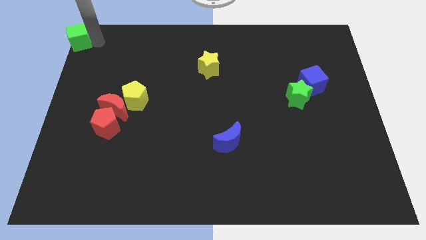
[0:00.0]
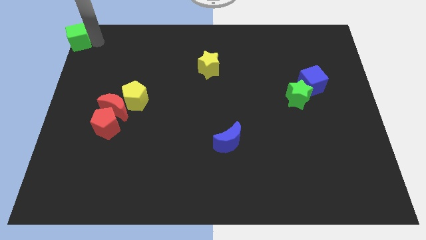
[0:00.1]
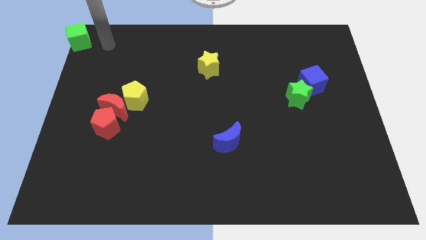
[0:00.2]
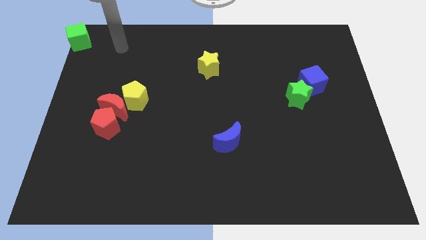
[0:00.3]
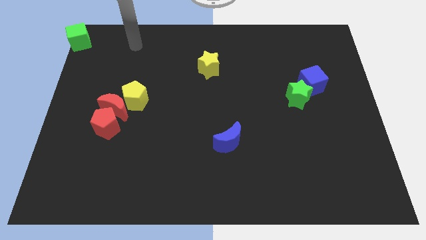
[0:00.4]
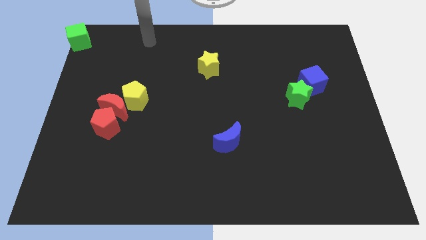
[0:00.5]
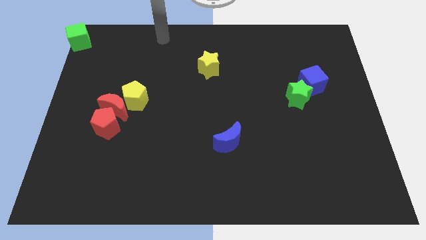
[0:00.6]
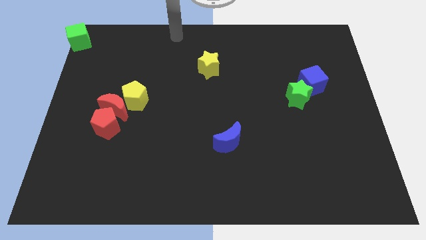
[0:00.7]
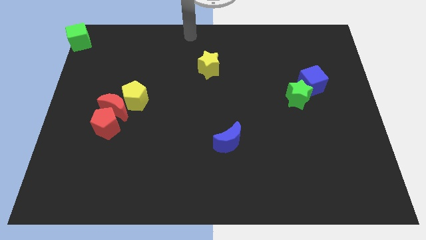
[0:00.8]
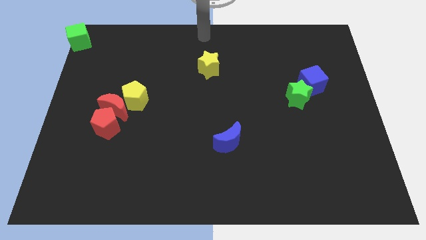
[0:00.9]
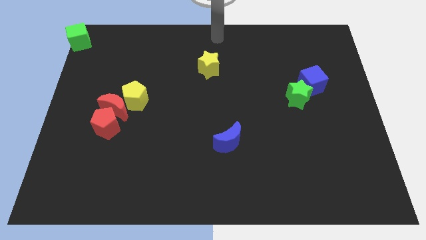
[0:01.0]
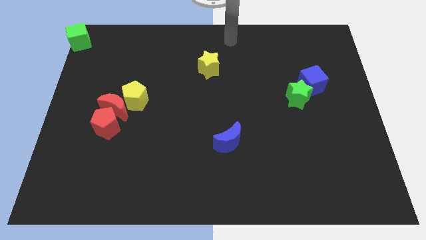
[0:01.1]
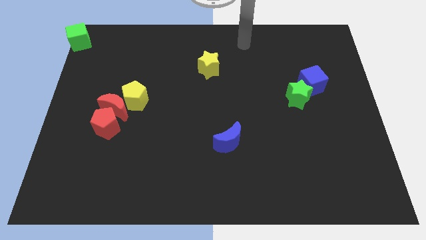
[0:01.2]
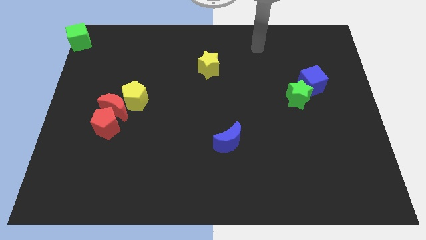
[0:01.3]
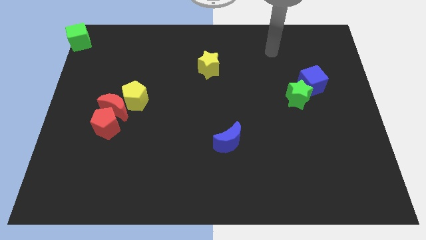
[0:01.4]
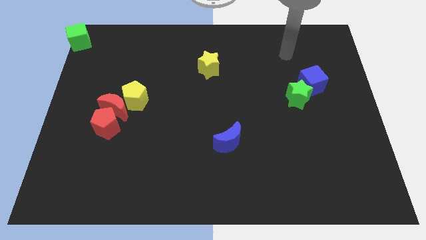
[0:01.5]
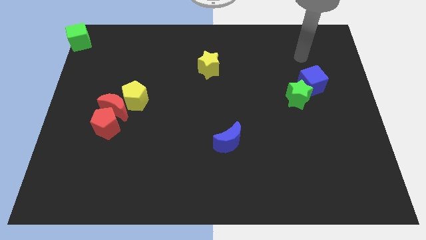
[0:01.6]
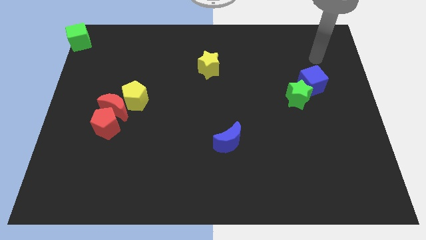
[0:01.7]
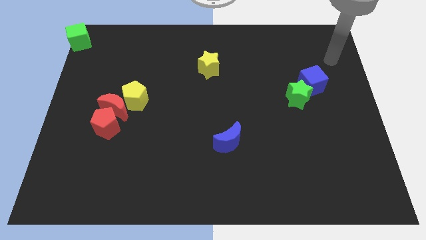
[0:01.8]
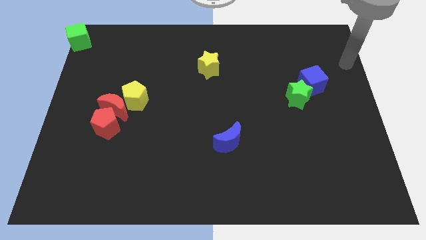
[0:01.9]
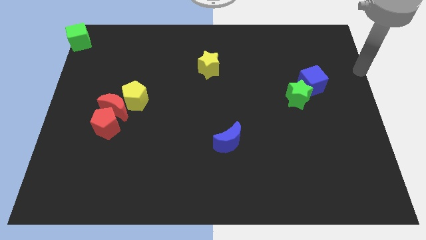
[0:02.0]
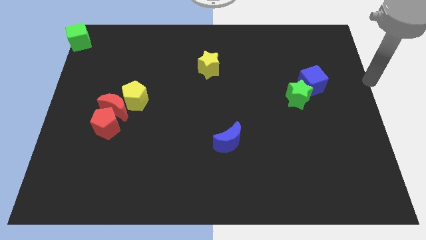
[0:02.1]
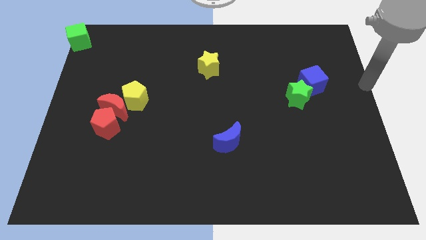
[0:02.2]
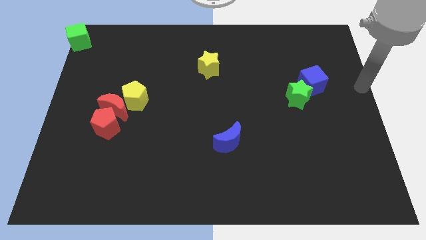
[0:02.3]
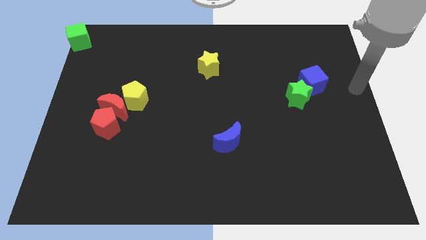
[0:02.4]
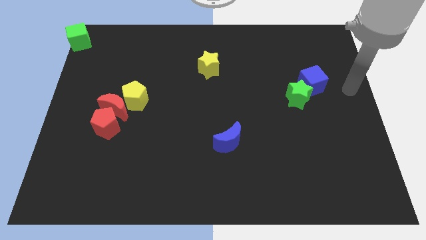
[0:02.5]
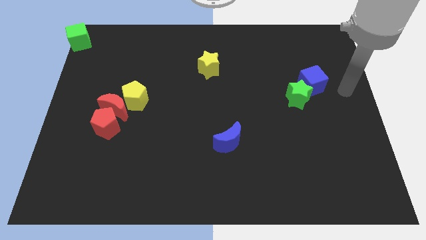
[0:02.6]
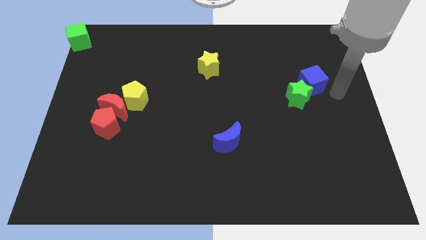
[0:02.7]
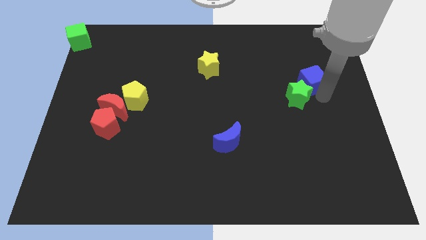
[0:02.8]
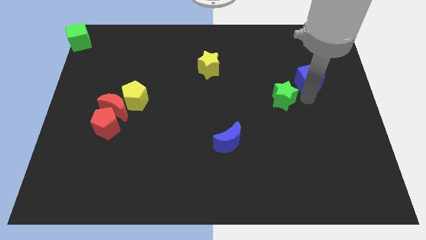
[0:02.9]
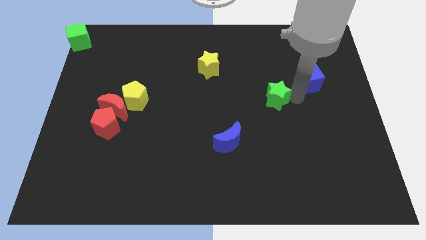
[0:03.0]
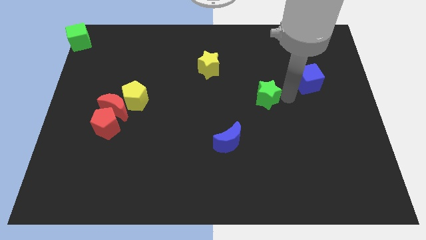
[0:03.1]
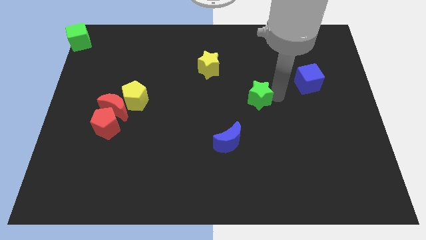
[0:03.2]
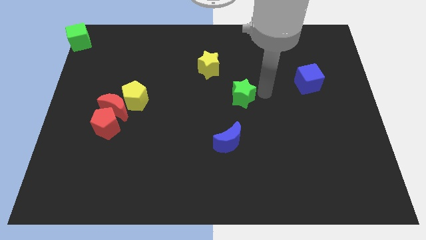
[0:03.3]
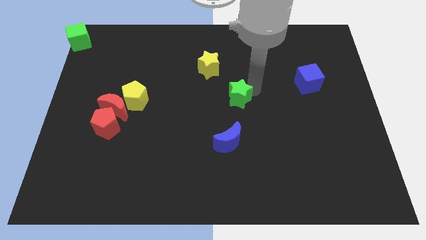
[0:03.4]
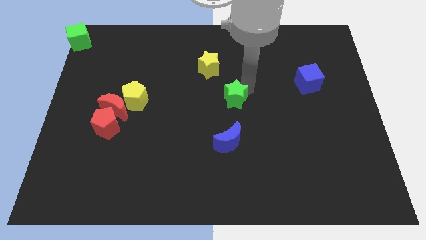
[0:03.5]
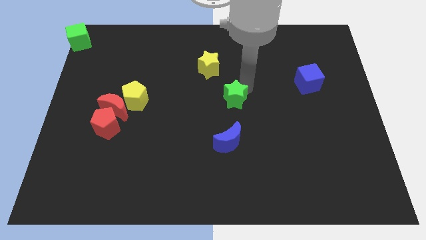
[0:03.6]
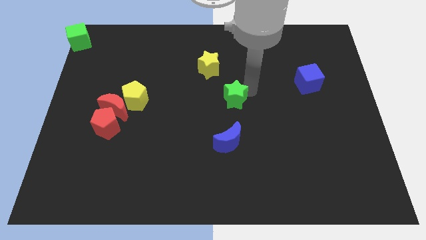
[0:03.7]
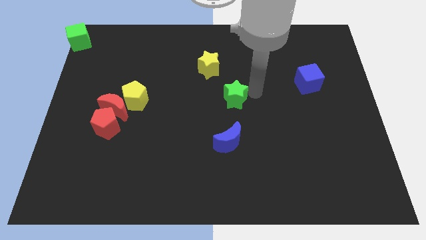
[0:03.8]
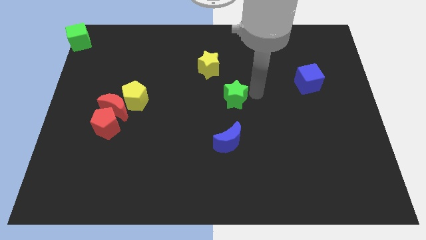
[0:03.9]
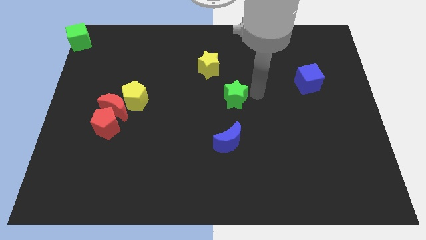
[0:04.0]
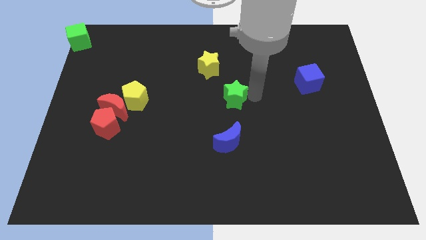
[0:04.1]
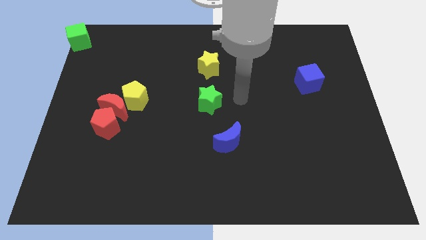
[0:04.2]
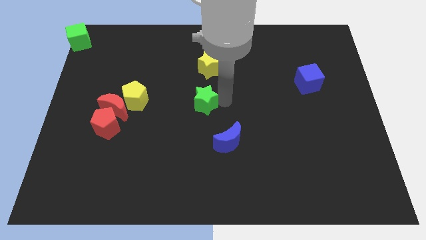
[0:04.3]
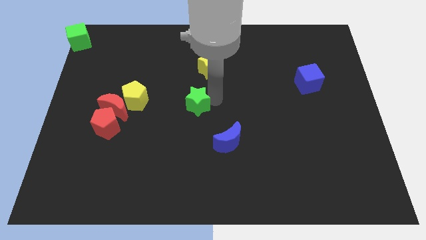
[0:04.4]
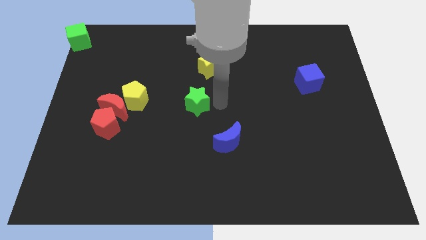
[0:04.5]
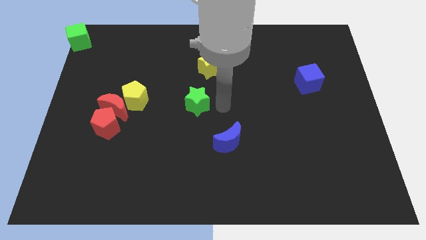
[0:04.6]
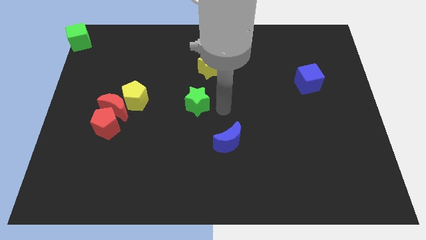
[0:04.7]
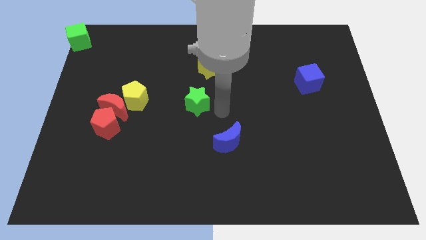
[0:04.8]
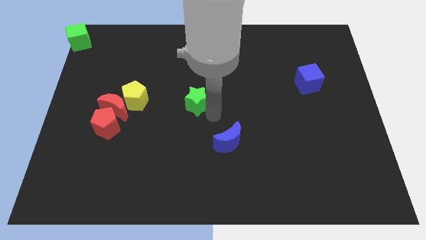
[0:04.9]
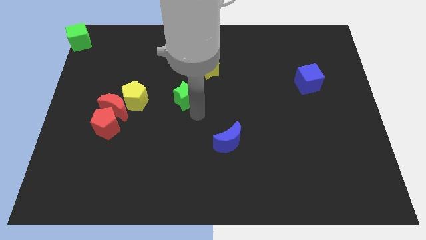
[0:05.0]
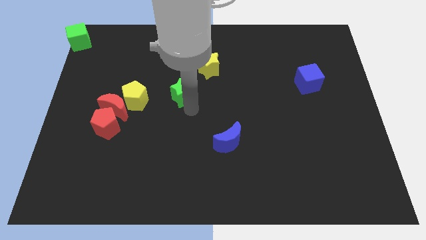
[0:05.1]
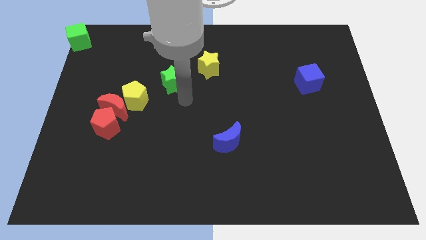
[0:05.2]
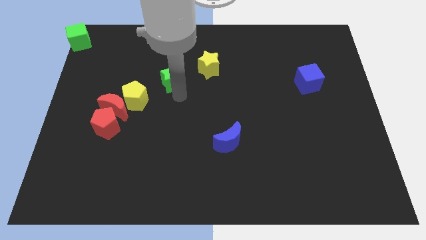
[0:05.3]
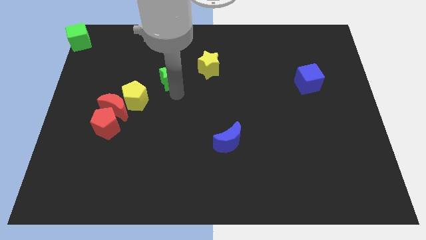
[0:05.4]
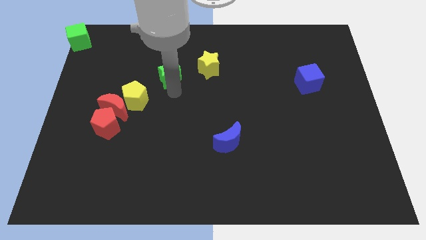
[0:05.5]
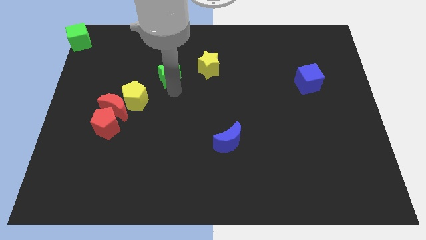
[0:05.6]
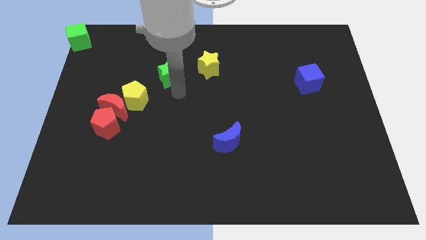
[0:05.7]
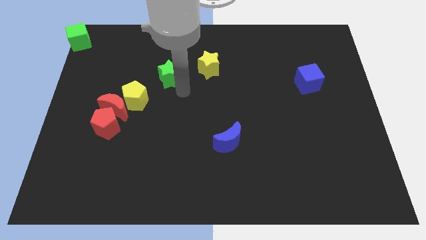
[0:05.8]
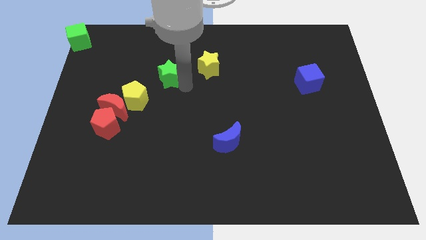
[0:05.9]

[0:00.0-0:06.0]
place the green star in between the yellow star and yellow pentagon

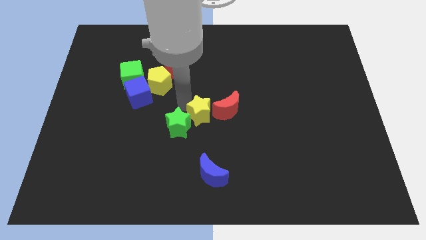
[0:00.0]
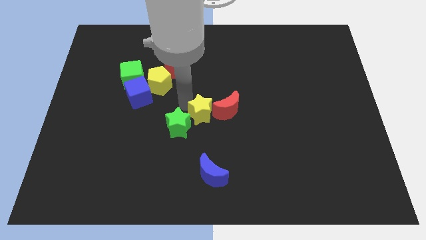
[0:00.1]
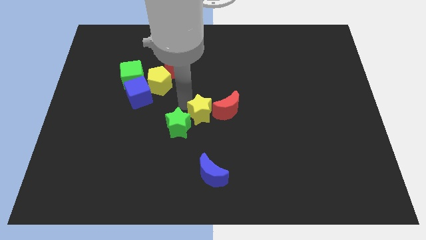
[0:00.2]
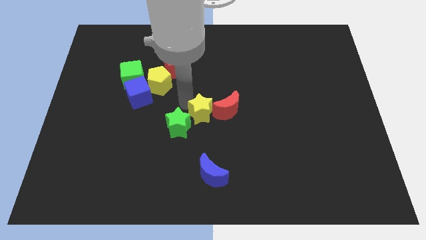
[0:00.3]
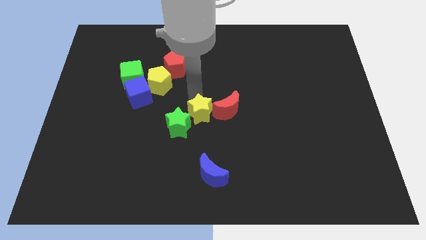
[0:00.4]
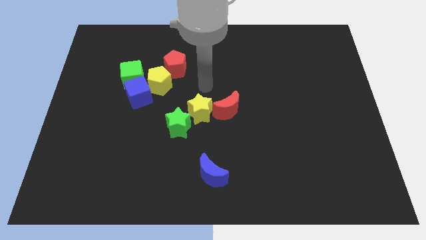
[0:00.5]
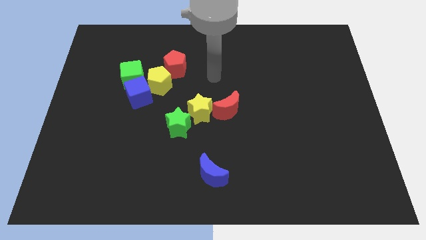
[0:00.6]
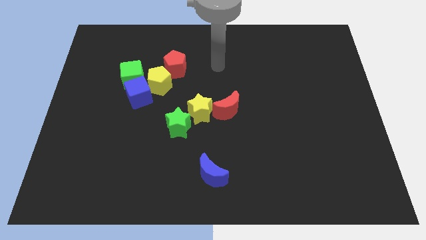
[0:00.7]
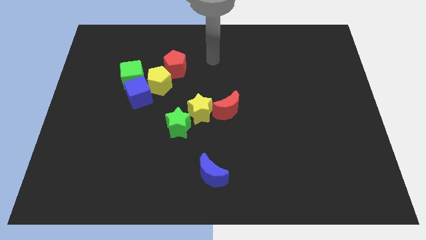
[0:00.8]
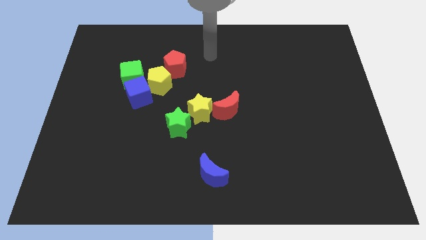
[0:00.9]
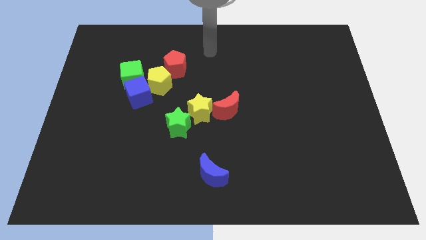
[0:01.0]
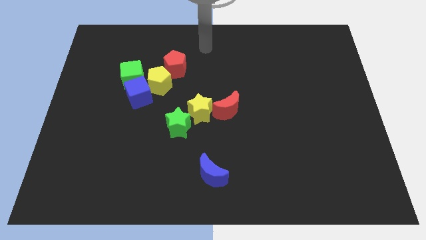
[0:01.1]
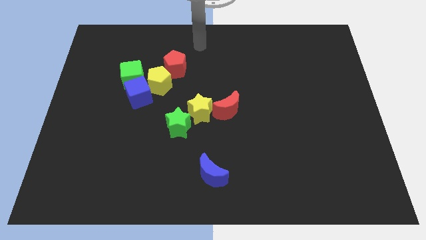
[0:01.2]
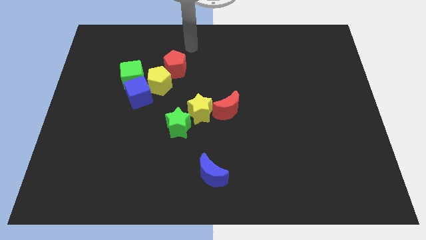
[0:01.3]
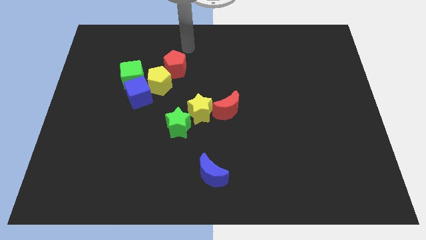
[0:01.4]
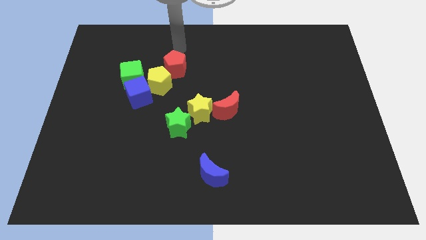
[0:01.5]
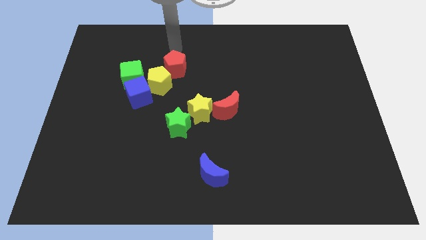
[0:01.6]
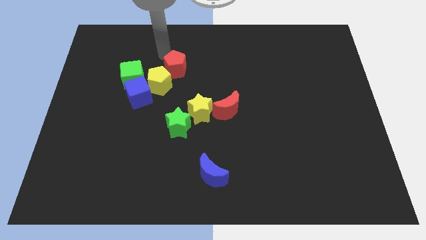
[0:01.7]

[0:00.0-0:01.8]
move the arm to the top of the red pentagon

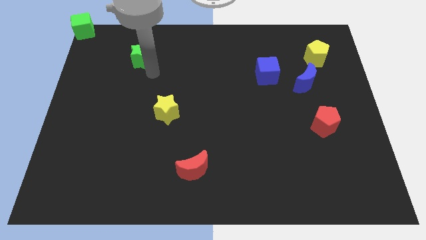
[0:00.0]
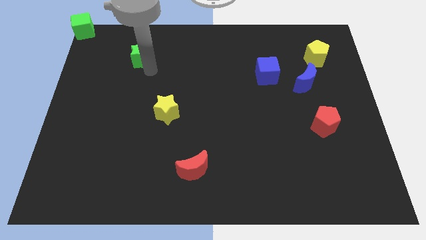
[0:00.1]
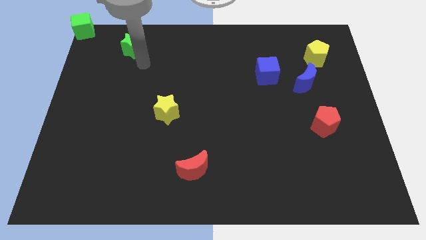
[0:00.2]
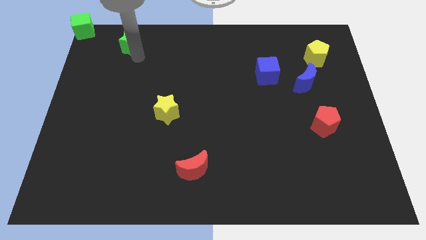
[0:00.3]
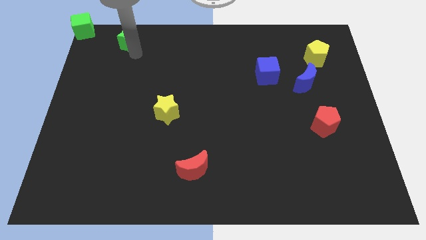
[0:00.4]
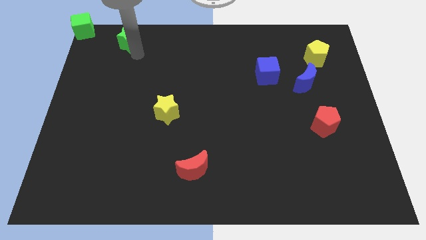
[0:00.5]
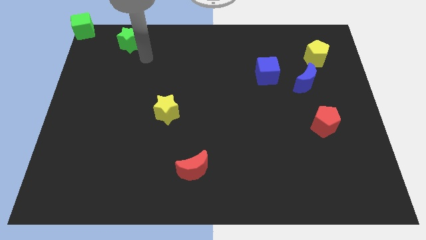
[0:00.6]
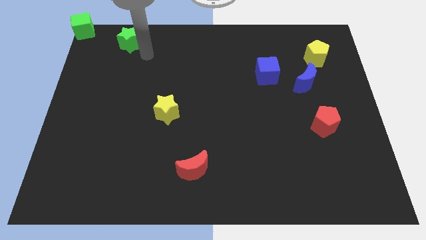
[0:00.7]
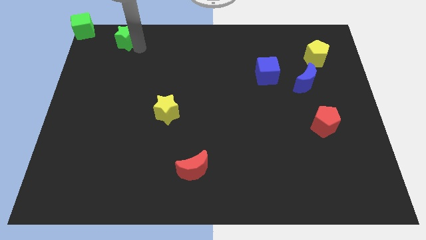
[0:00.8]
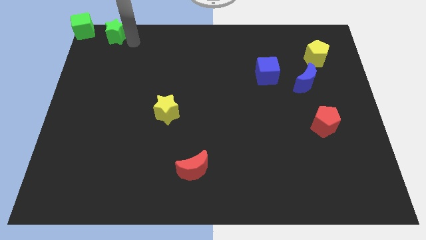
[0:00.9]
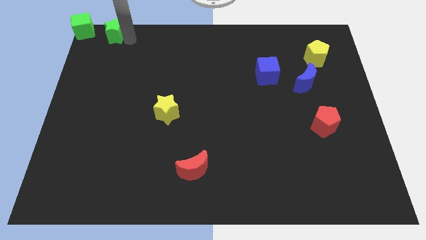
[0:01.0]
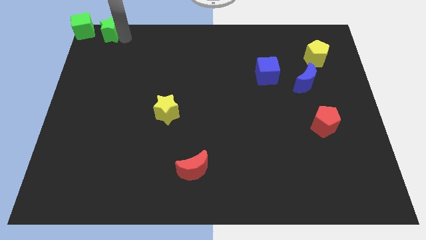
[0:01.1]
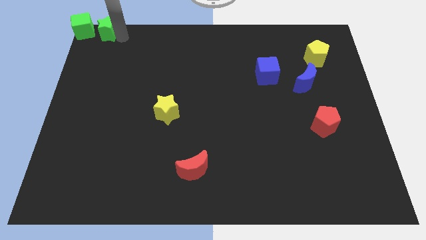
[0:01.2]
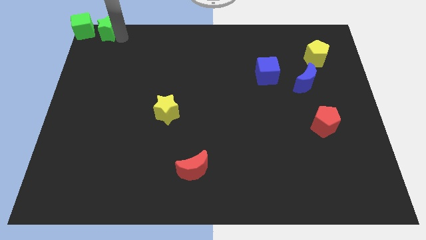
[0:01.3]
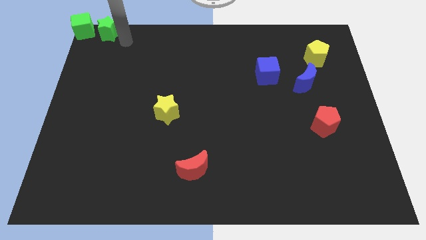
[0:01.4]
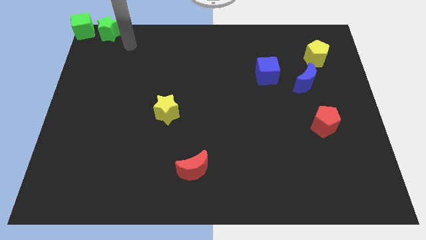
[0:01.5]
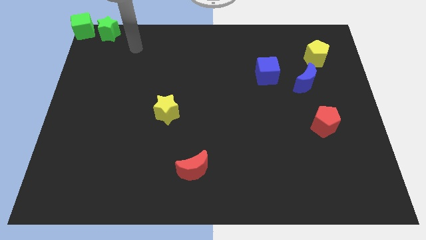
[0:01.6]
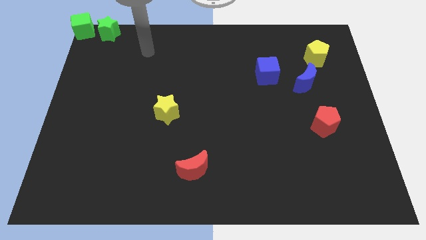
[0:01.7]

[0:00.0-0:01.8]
move the green star right to the green cube
